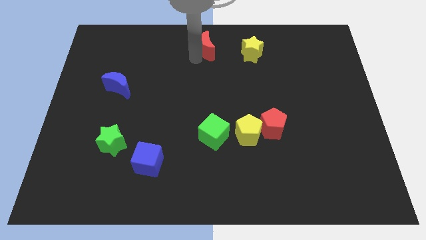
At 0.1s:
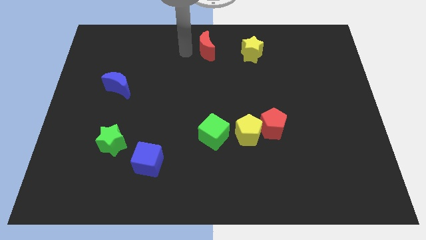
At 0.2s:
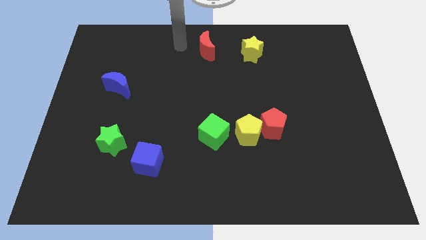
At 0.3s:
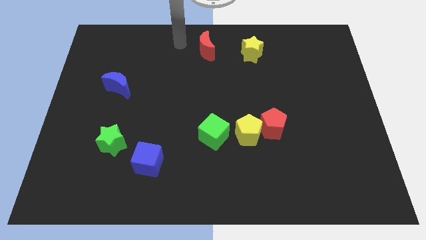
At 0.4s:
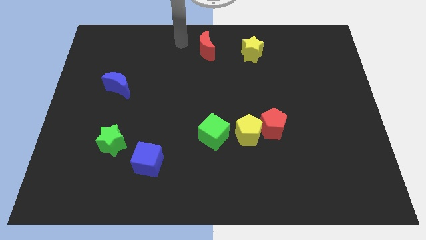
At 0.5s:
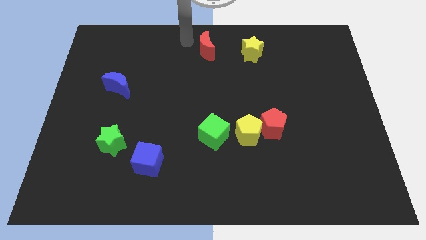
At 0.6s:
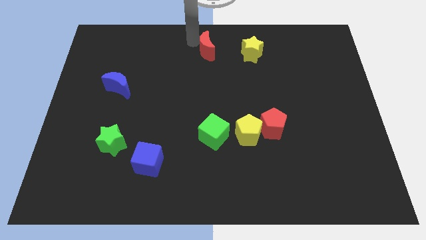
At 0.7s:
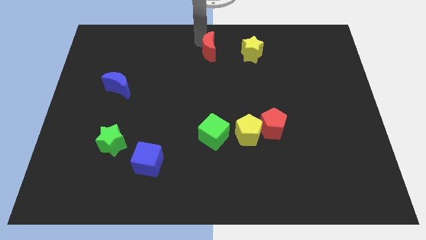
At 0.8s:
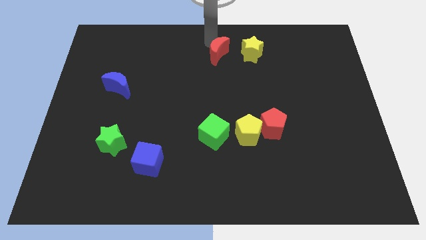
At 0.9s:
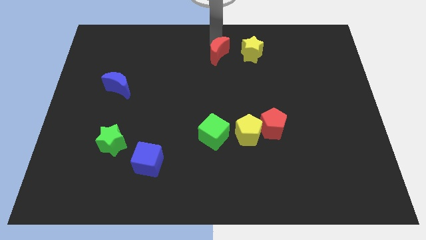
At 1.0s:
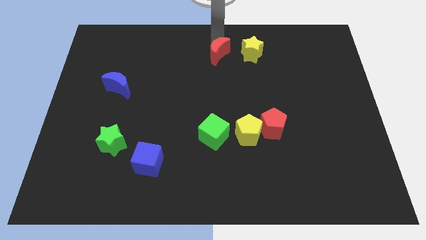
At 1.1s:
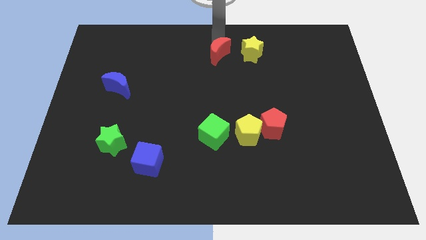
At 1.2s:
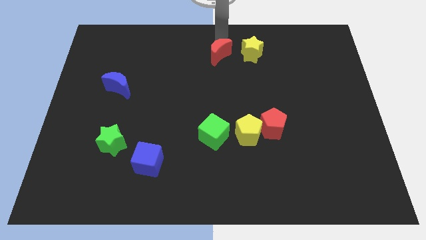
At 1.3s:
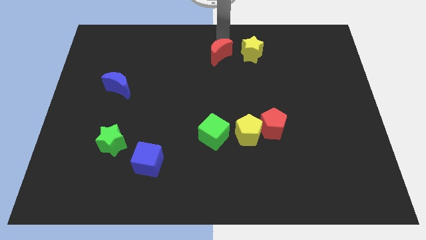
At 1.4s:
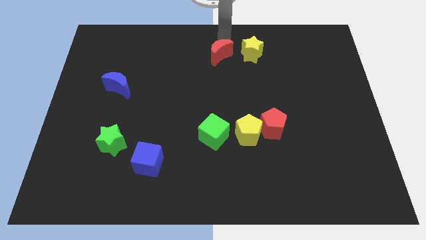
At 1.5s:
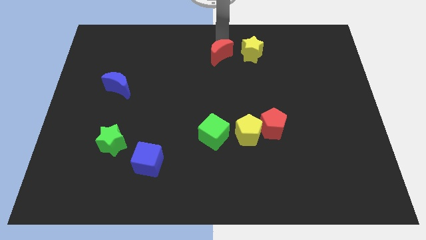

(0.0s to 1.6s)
push the red moon towards the left side of the yellow star

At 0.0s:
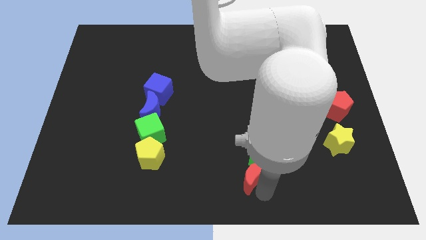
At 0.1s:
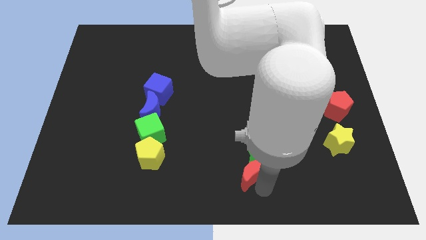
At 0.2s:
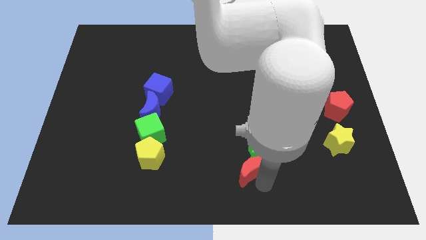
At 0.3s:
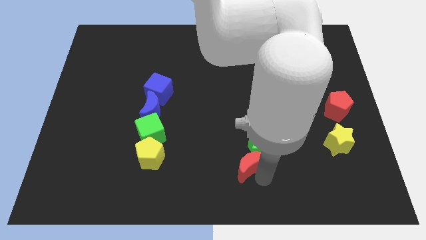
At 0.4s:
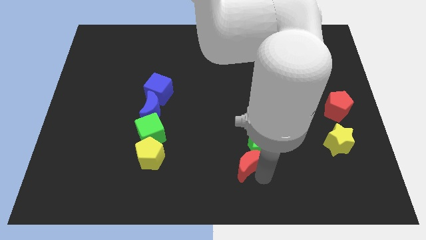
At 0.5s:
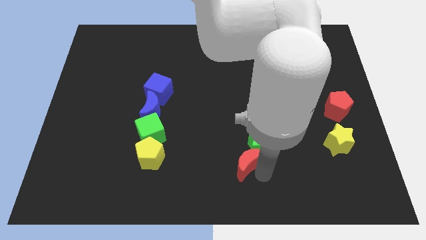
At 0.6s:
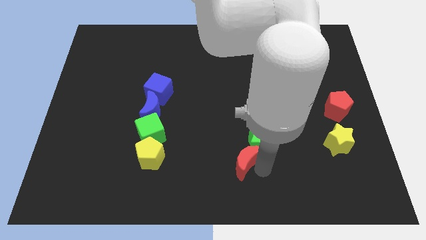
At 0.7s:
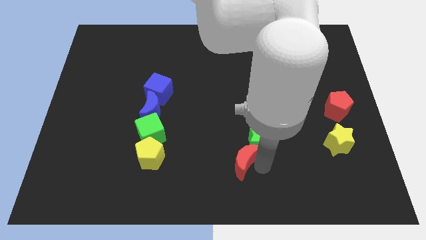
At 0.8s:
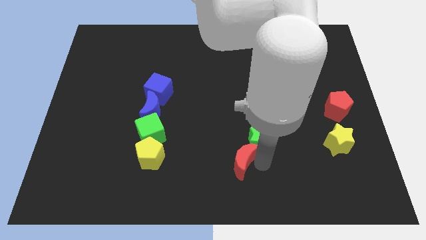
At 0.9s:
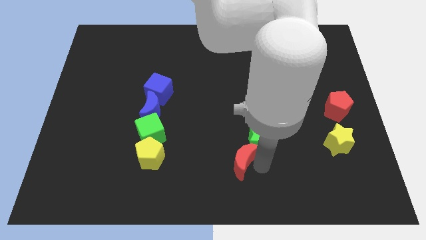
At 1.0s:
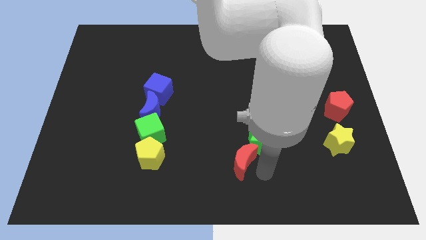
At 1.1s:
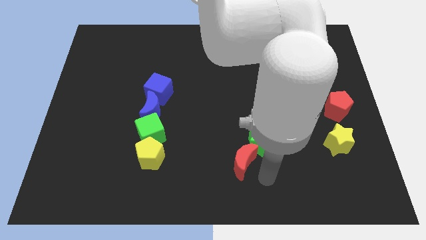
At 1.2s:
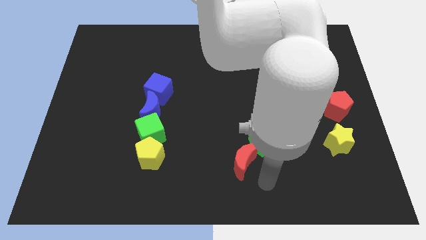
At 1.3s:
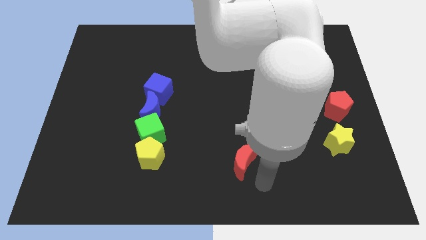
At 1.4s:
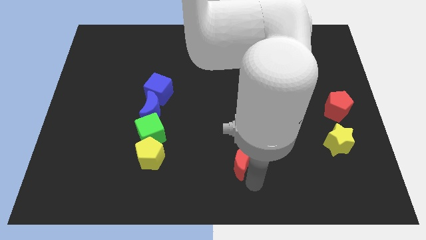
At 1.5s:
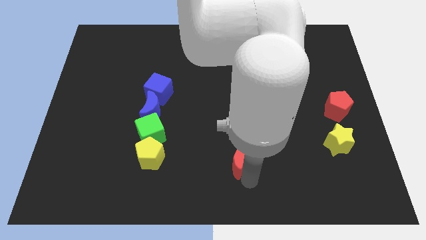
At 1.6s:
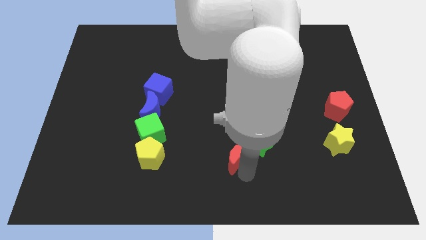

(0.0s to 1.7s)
push the red moon and green star slightly to the top side of the board

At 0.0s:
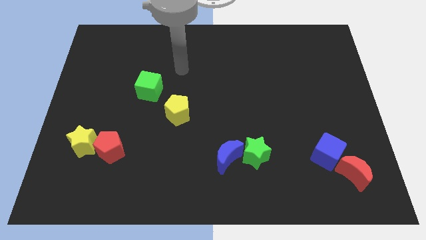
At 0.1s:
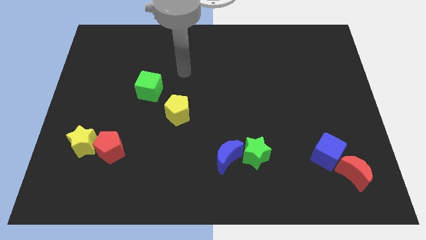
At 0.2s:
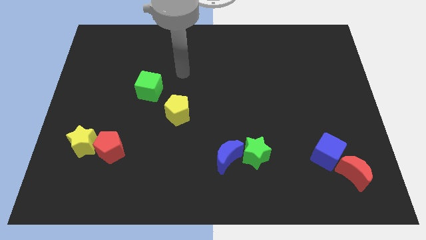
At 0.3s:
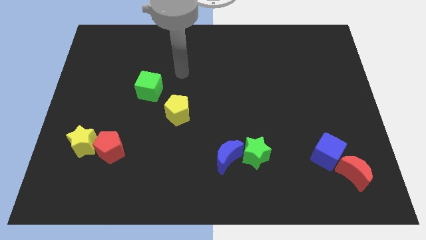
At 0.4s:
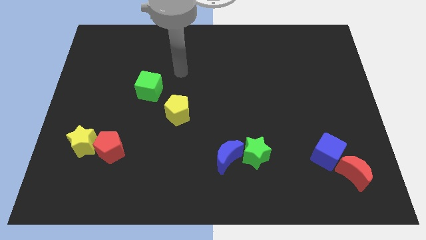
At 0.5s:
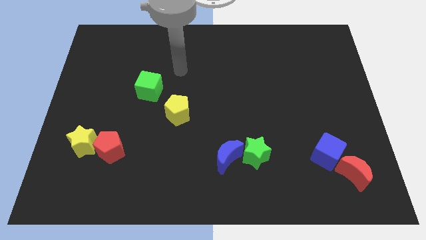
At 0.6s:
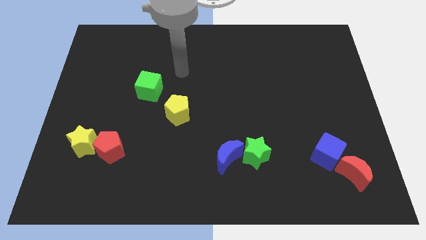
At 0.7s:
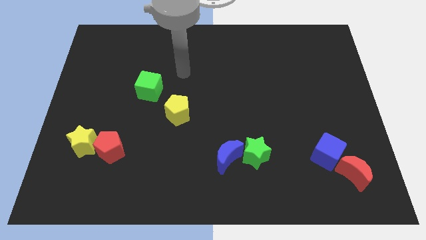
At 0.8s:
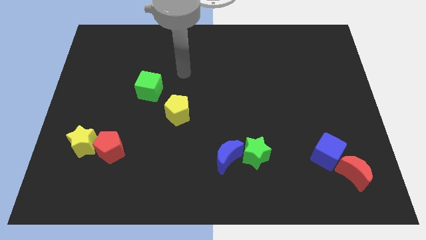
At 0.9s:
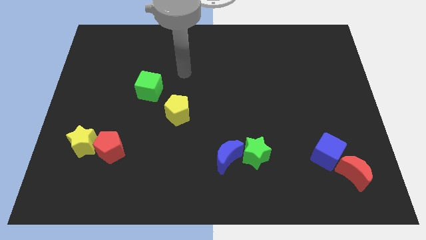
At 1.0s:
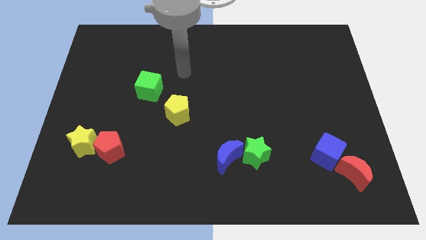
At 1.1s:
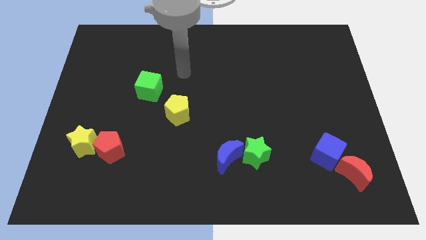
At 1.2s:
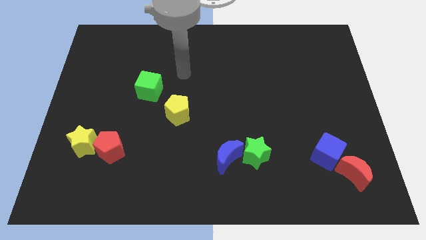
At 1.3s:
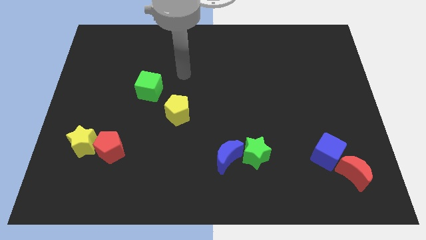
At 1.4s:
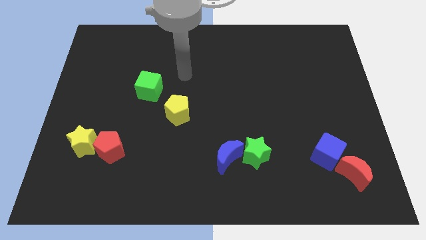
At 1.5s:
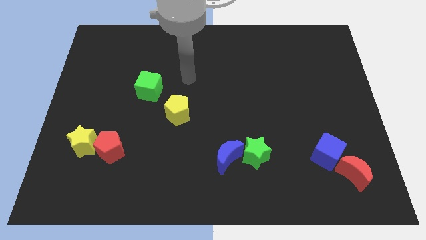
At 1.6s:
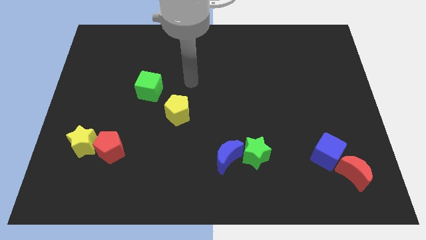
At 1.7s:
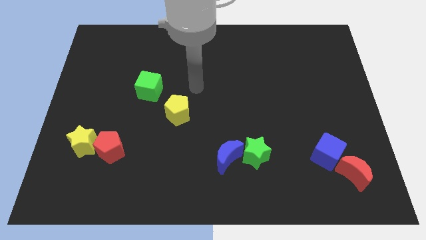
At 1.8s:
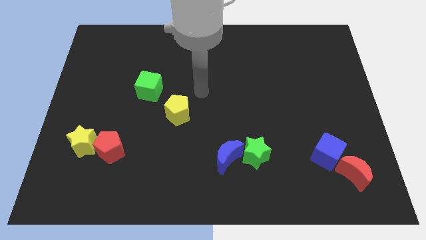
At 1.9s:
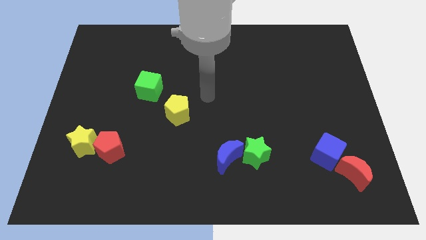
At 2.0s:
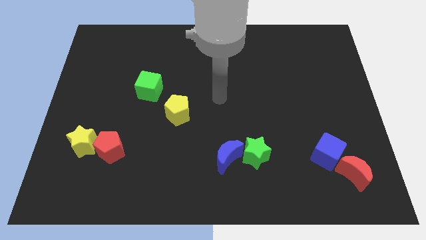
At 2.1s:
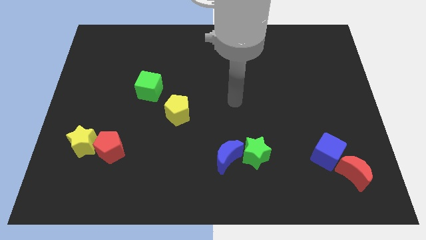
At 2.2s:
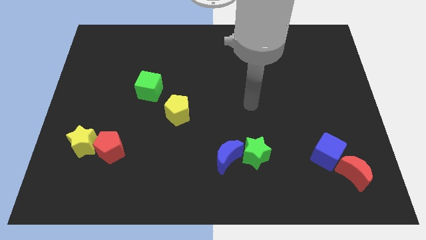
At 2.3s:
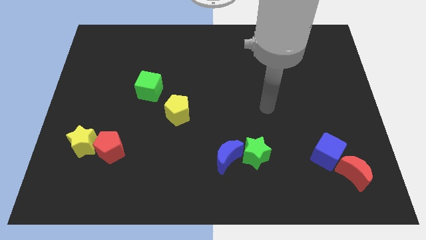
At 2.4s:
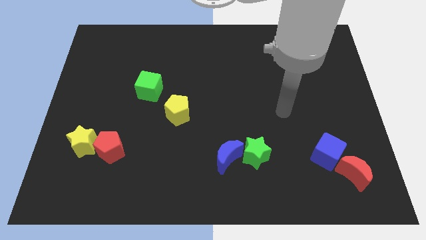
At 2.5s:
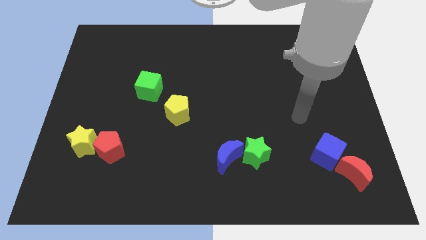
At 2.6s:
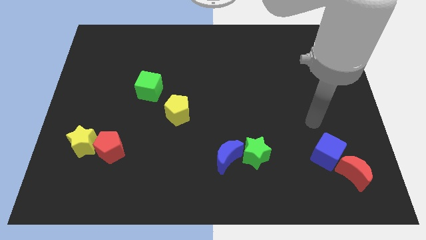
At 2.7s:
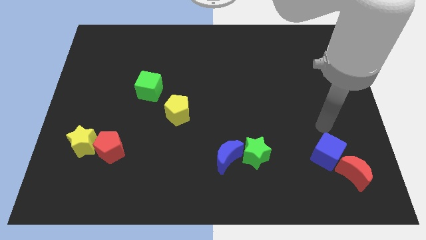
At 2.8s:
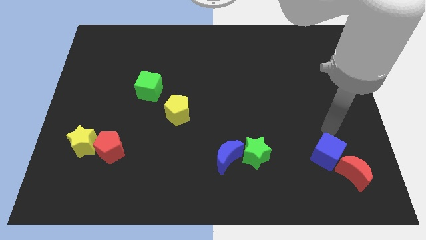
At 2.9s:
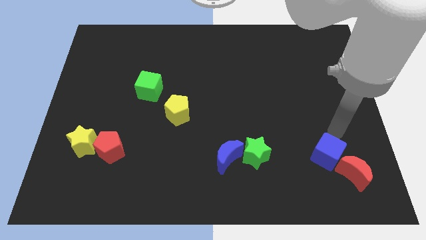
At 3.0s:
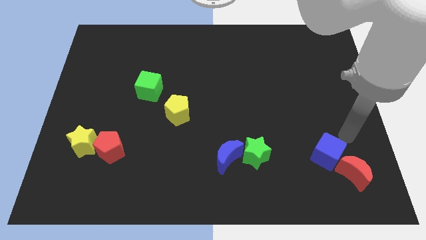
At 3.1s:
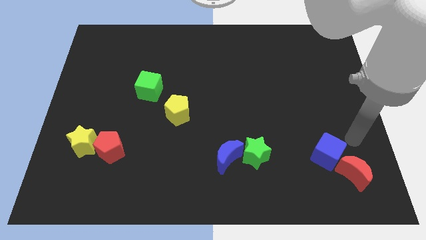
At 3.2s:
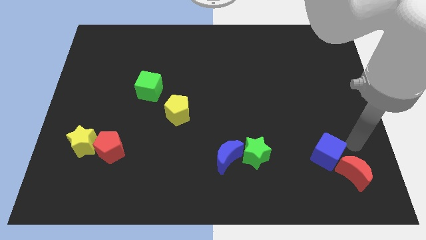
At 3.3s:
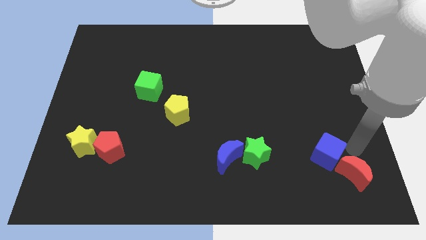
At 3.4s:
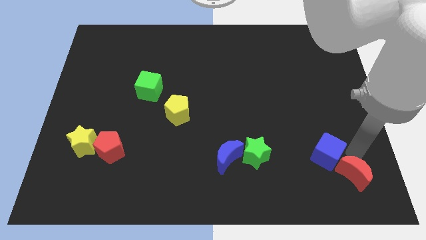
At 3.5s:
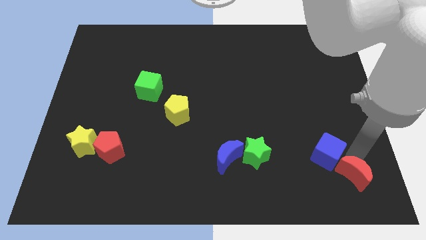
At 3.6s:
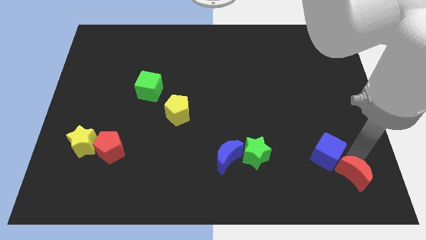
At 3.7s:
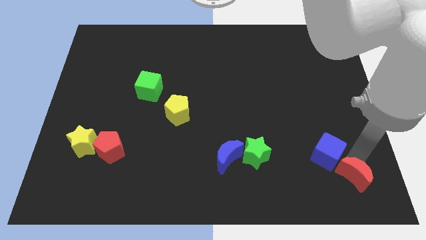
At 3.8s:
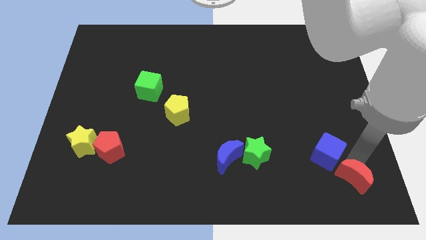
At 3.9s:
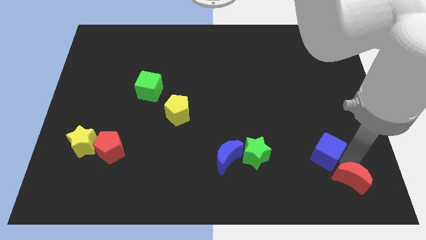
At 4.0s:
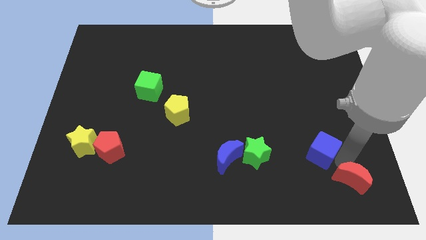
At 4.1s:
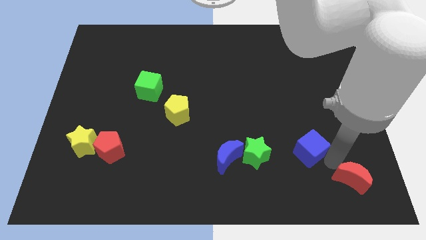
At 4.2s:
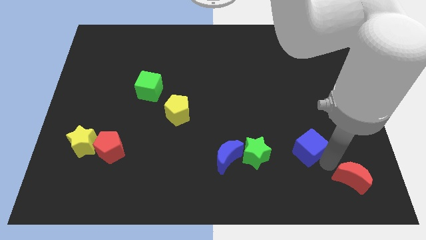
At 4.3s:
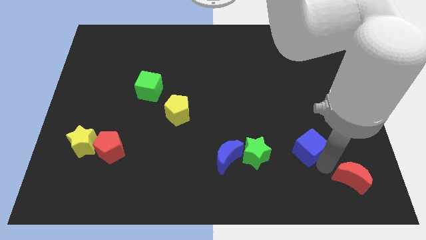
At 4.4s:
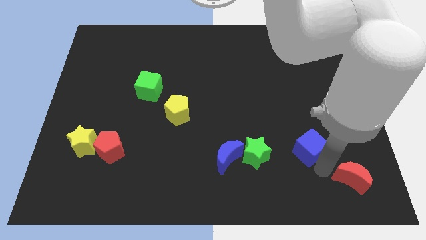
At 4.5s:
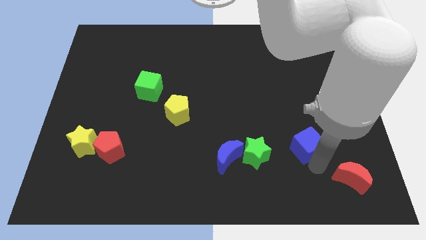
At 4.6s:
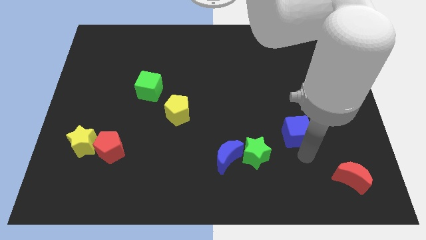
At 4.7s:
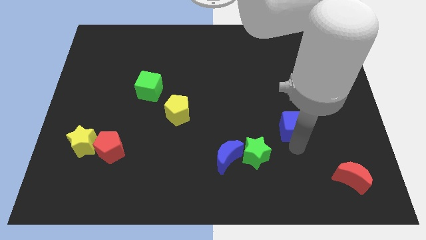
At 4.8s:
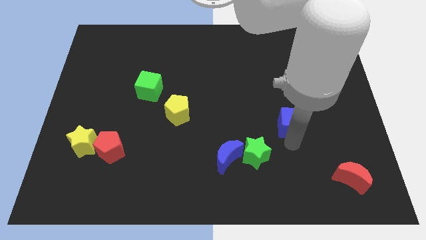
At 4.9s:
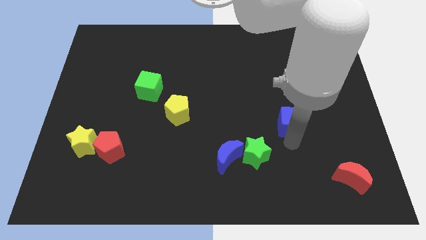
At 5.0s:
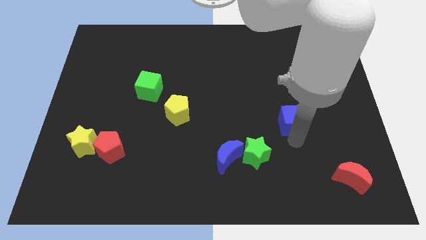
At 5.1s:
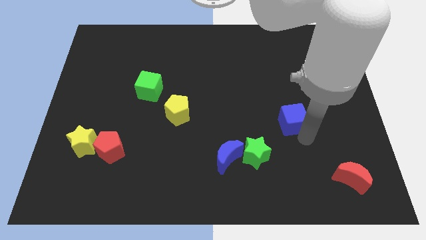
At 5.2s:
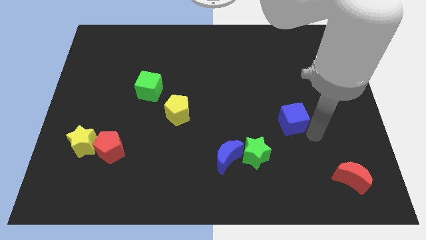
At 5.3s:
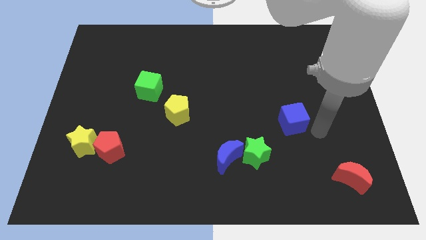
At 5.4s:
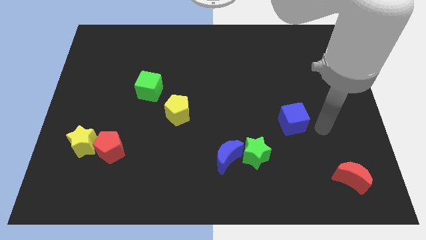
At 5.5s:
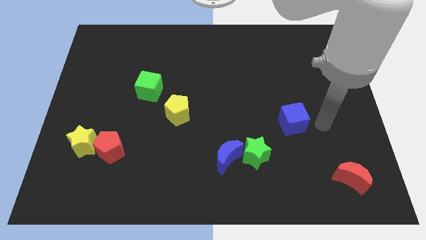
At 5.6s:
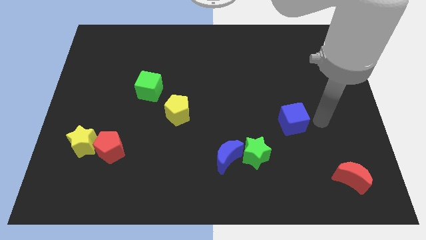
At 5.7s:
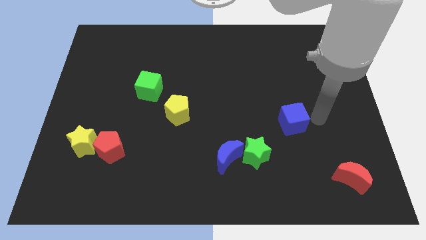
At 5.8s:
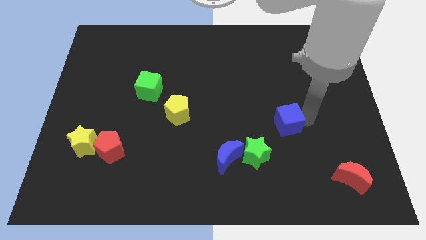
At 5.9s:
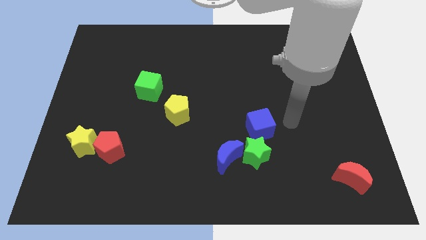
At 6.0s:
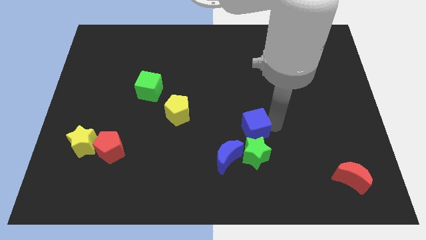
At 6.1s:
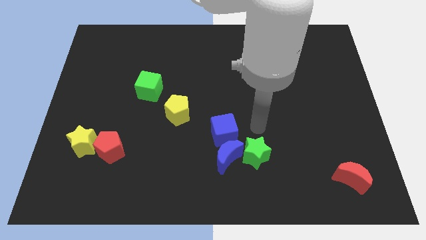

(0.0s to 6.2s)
separate the blue cube from the red moon
